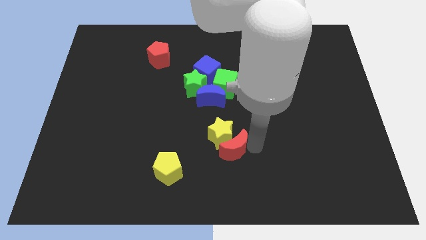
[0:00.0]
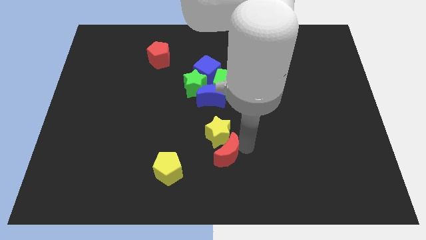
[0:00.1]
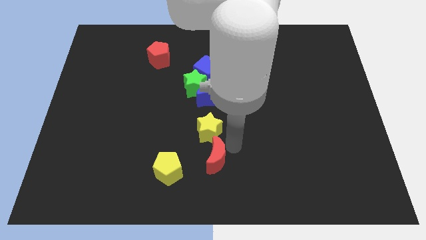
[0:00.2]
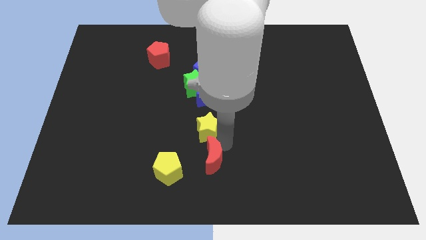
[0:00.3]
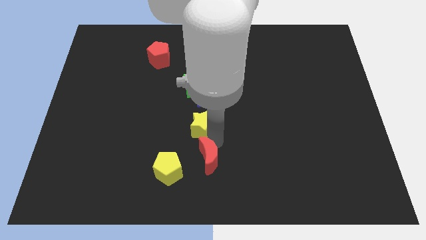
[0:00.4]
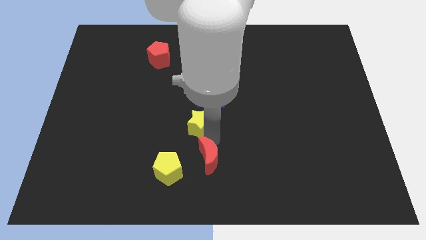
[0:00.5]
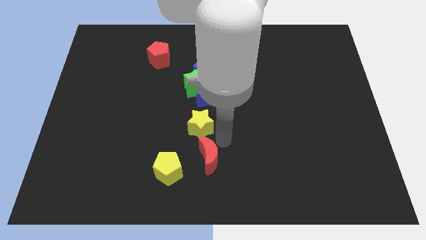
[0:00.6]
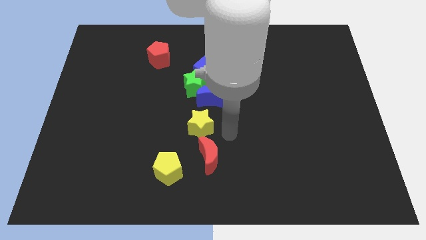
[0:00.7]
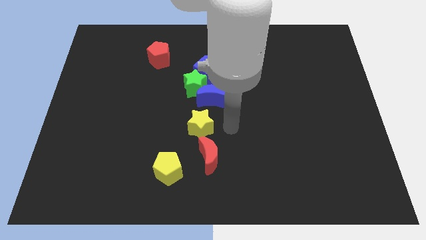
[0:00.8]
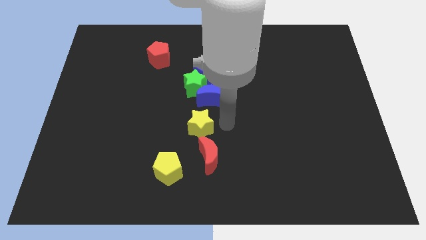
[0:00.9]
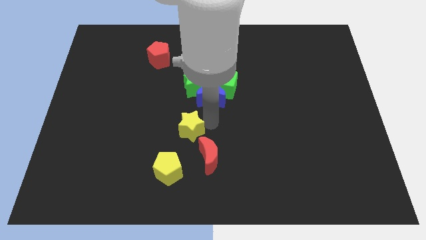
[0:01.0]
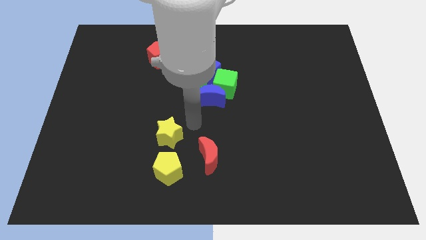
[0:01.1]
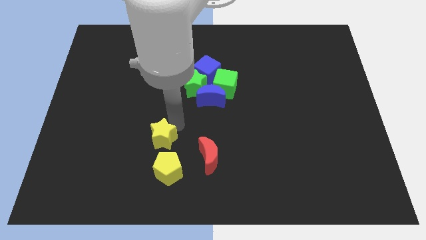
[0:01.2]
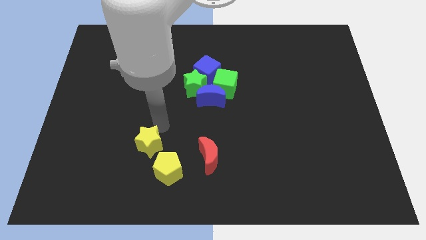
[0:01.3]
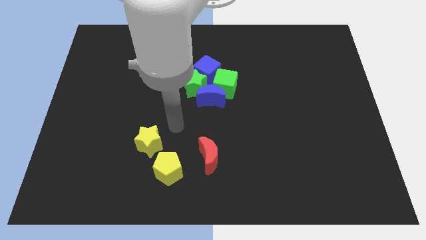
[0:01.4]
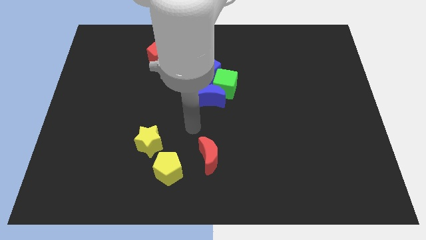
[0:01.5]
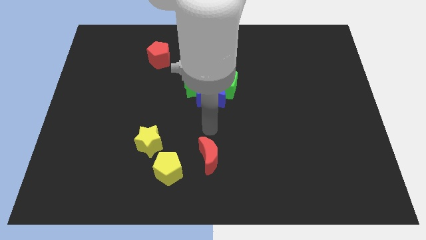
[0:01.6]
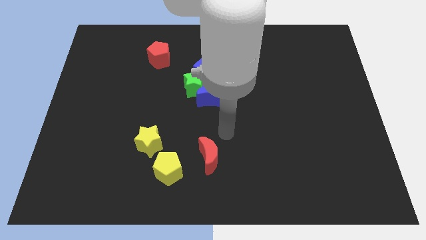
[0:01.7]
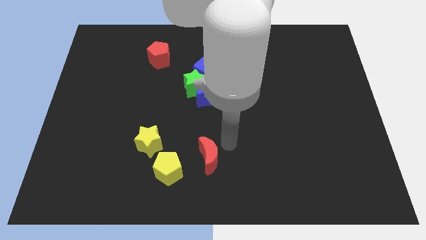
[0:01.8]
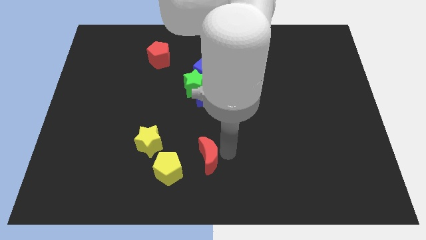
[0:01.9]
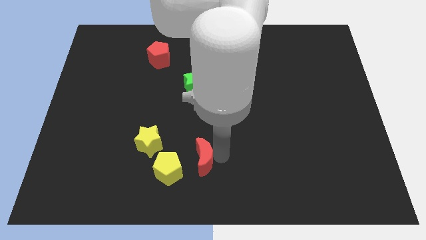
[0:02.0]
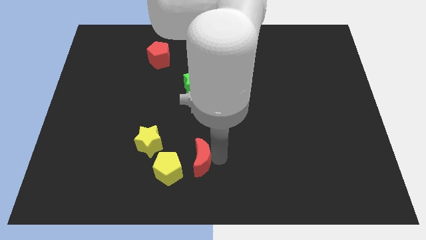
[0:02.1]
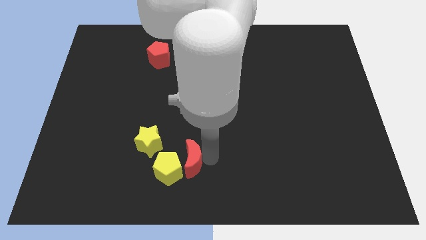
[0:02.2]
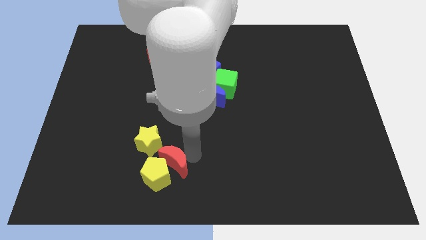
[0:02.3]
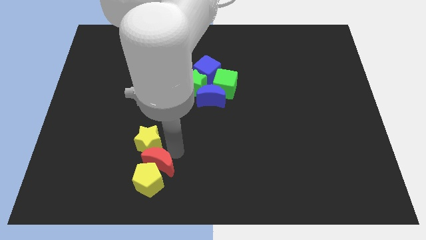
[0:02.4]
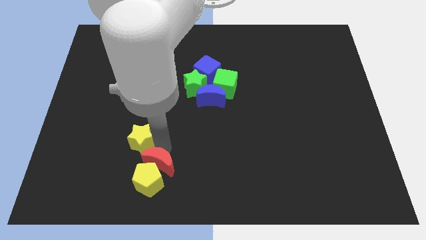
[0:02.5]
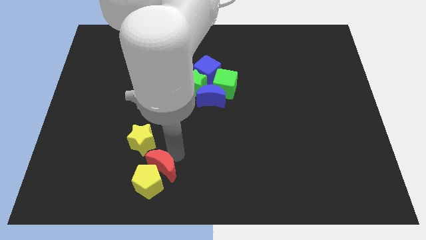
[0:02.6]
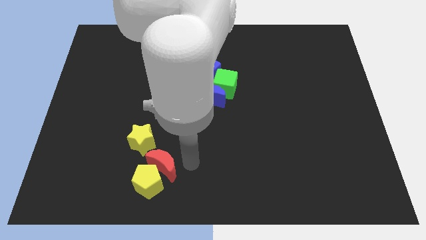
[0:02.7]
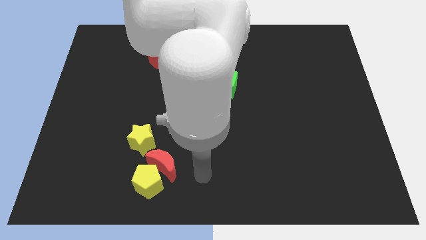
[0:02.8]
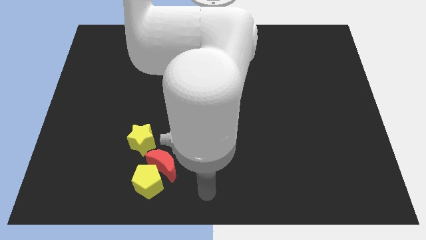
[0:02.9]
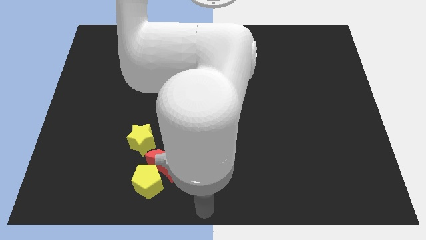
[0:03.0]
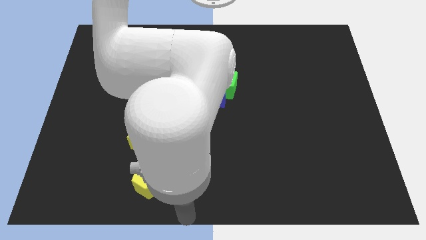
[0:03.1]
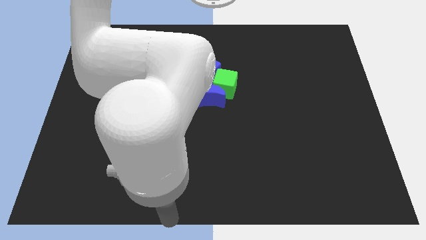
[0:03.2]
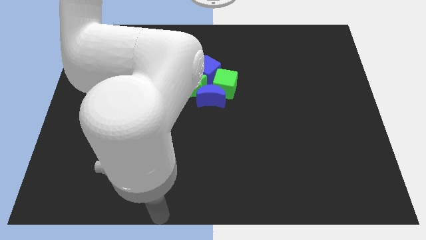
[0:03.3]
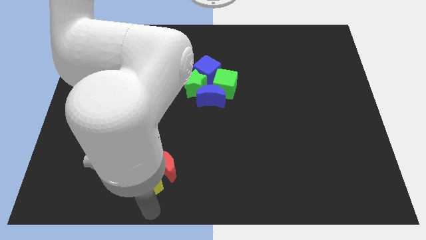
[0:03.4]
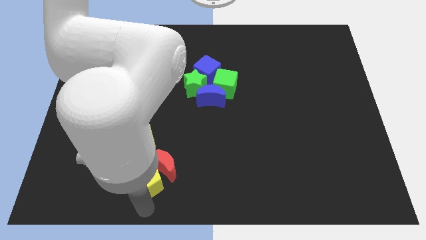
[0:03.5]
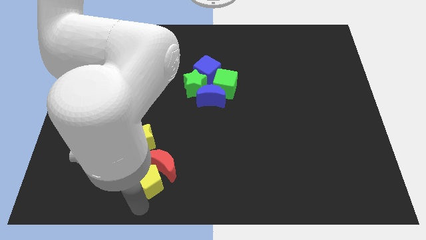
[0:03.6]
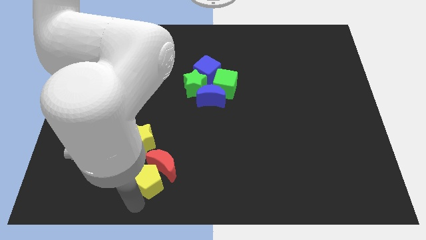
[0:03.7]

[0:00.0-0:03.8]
push the red crescent into the yellow pentagon

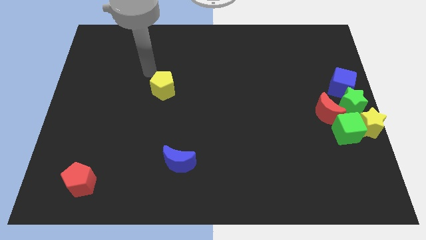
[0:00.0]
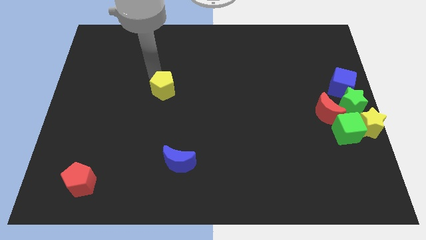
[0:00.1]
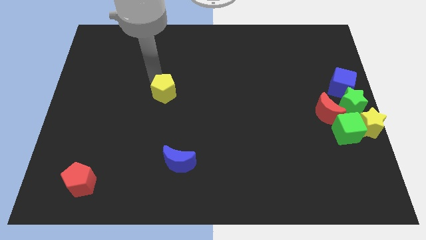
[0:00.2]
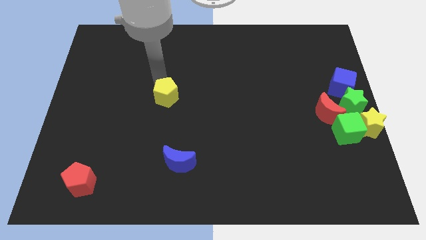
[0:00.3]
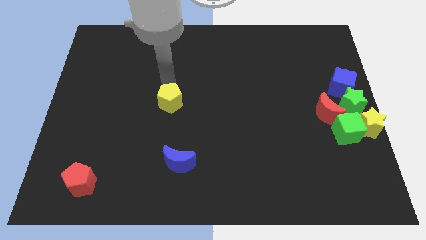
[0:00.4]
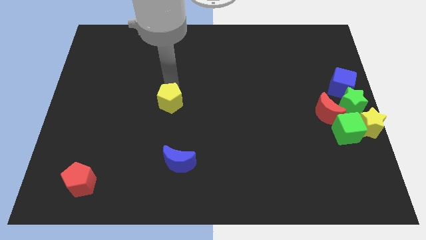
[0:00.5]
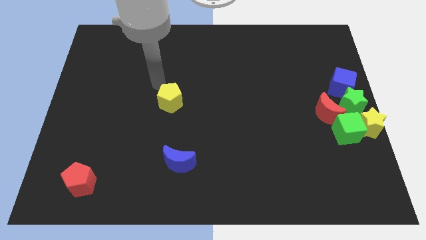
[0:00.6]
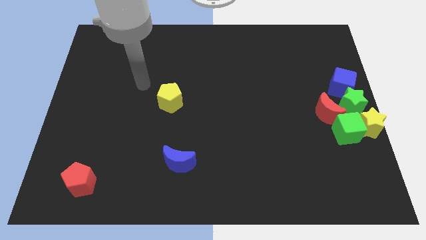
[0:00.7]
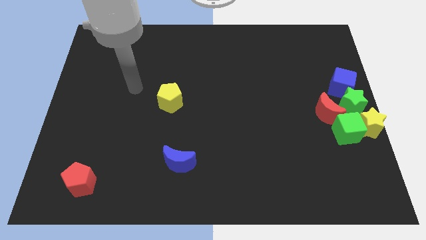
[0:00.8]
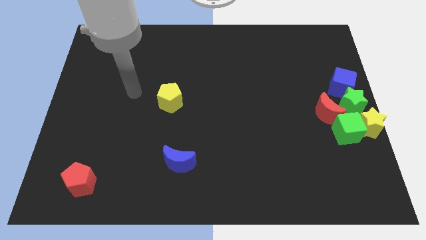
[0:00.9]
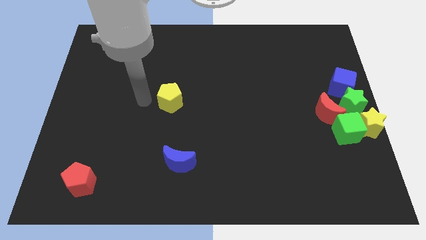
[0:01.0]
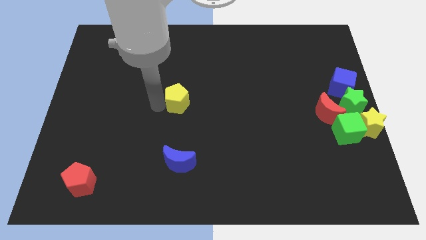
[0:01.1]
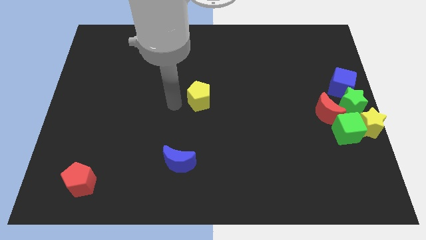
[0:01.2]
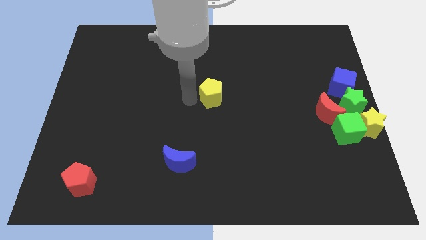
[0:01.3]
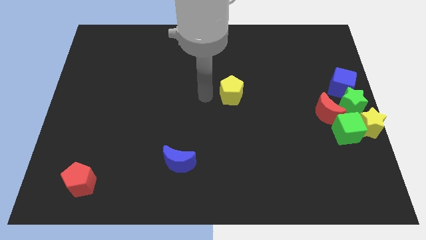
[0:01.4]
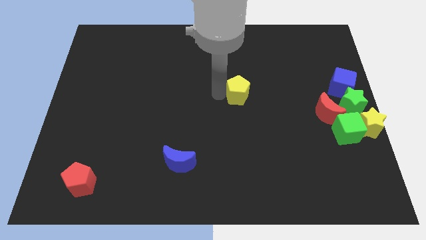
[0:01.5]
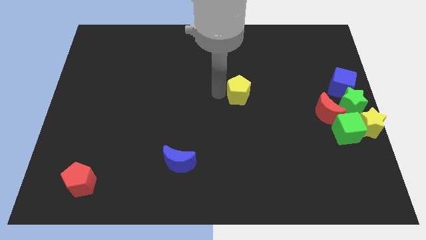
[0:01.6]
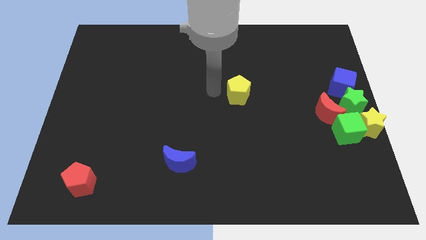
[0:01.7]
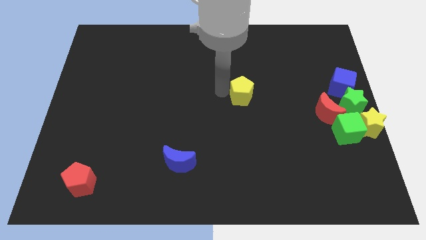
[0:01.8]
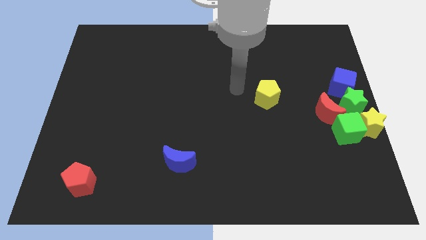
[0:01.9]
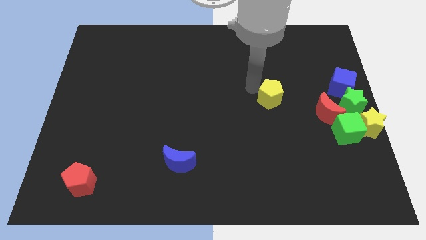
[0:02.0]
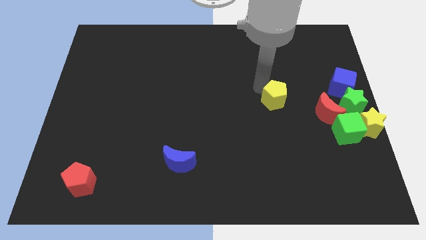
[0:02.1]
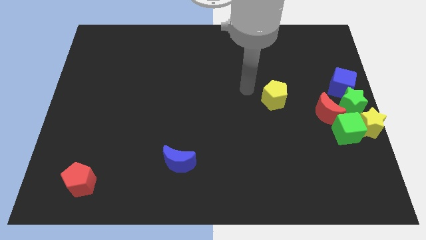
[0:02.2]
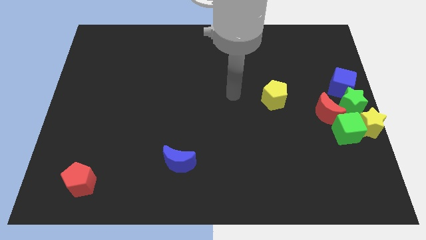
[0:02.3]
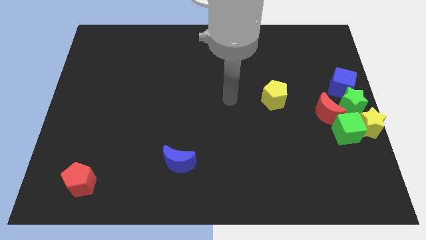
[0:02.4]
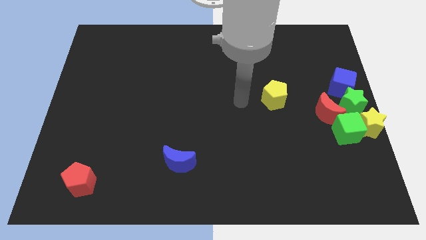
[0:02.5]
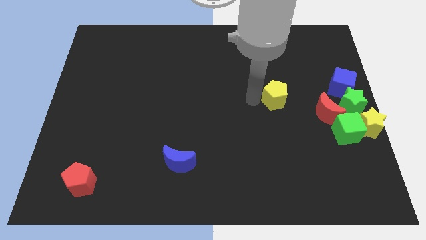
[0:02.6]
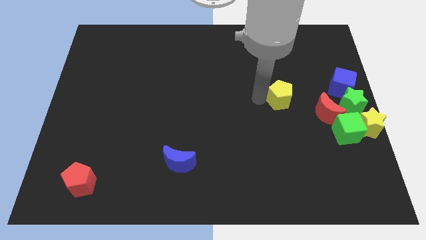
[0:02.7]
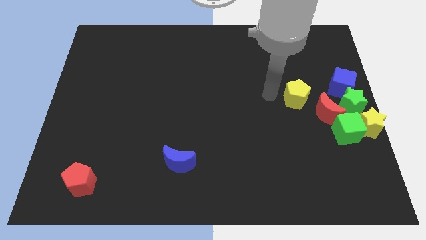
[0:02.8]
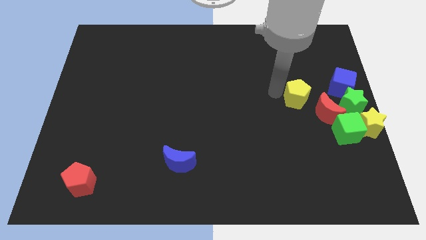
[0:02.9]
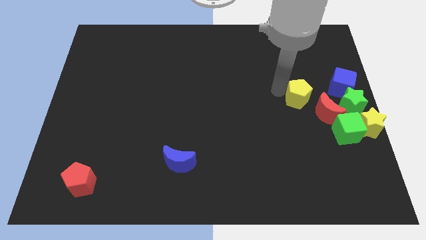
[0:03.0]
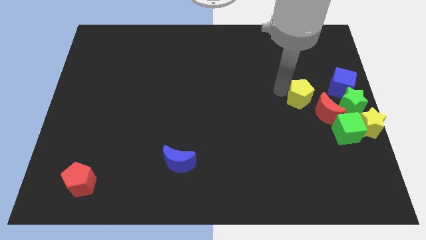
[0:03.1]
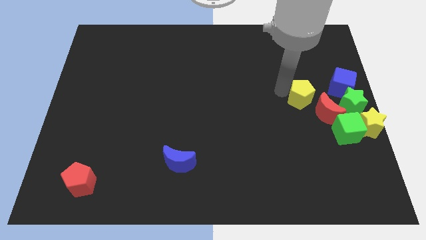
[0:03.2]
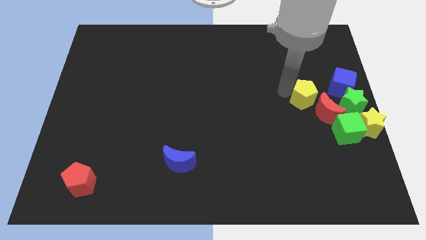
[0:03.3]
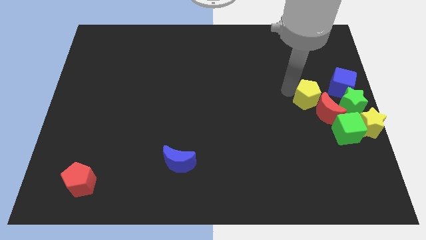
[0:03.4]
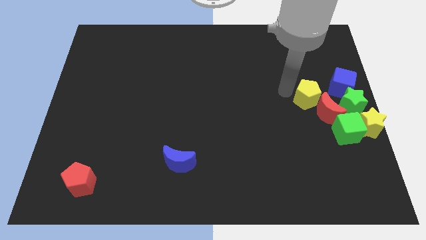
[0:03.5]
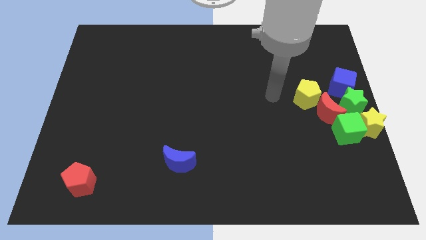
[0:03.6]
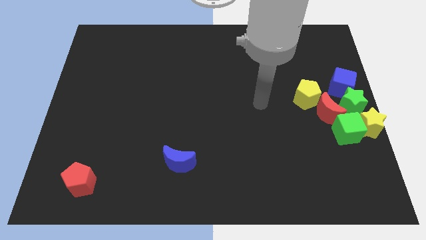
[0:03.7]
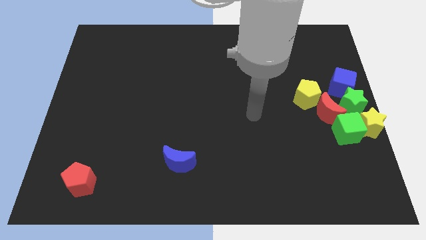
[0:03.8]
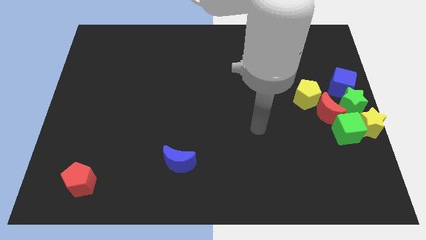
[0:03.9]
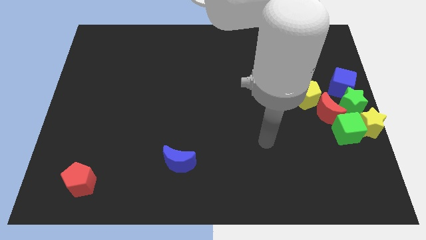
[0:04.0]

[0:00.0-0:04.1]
push the yellow pentagon into the group of blocks

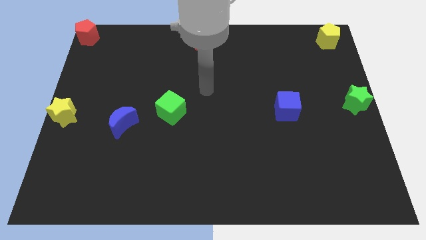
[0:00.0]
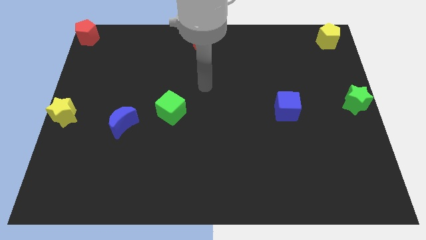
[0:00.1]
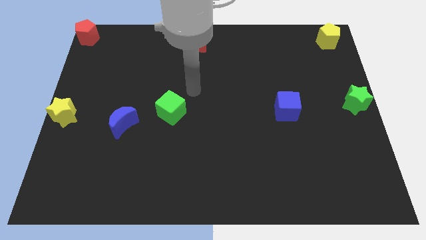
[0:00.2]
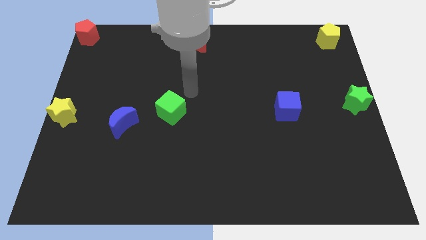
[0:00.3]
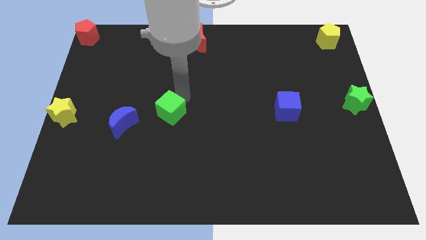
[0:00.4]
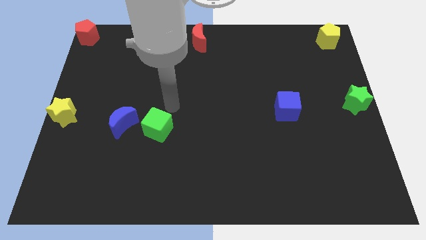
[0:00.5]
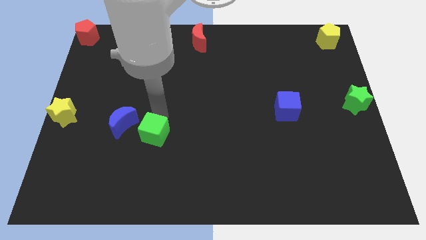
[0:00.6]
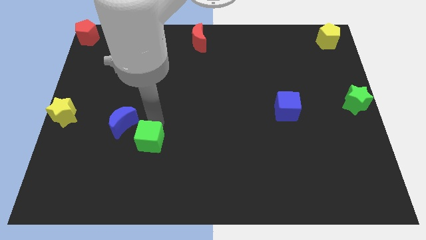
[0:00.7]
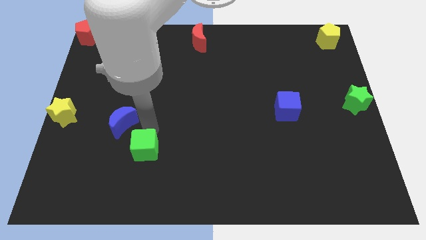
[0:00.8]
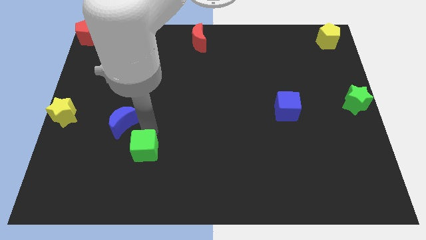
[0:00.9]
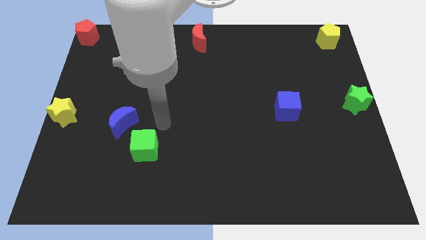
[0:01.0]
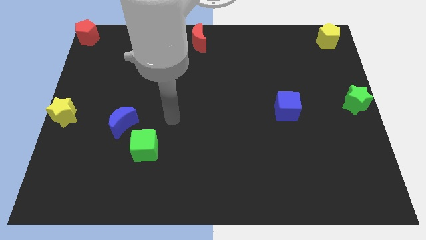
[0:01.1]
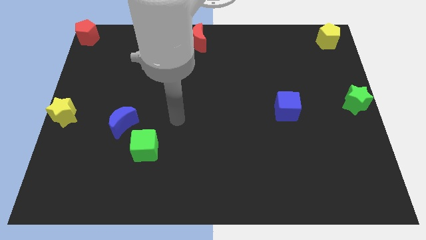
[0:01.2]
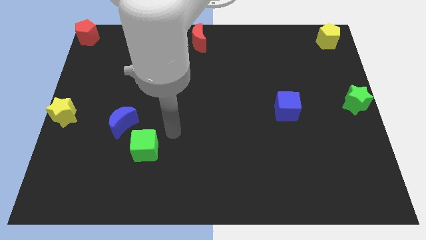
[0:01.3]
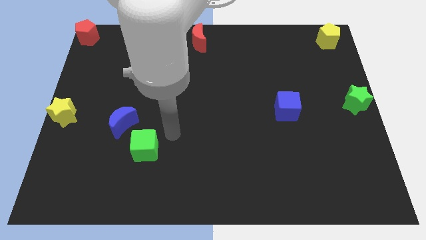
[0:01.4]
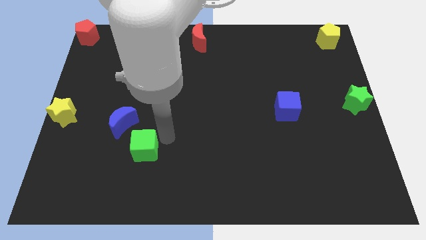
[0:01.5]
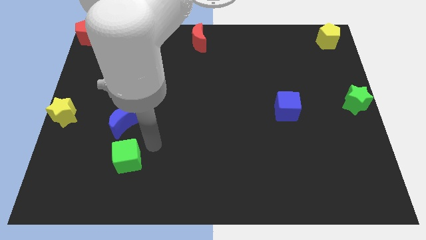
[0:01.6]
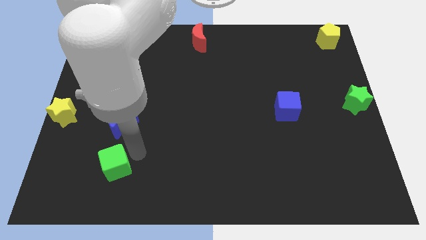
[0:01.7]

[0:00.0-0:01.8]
push the green cube to the bottom of the blue crescent
